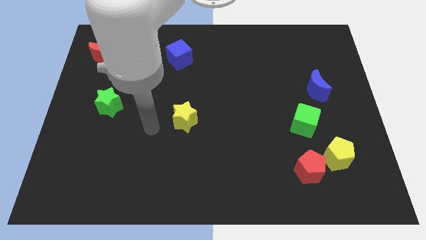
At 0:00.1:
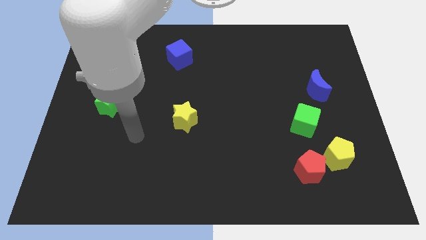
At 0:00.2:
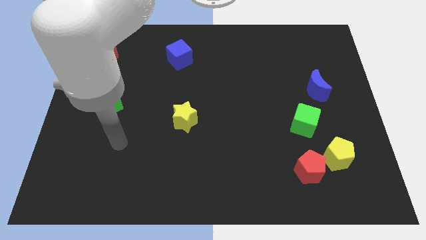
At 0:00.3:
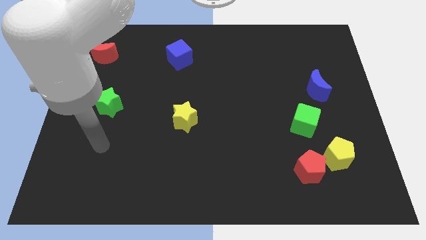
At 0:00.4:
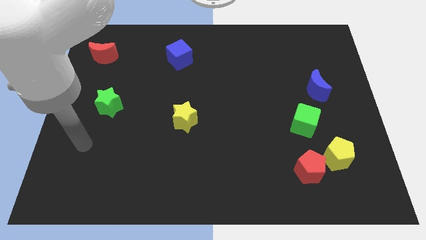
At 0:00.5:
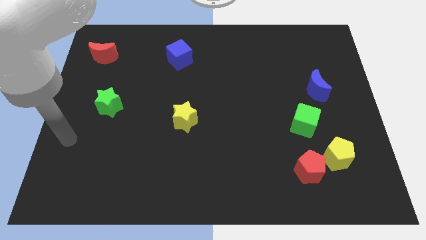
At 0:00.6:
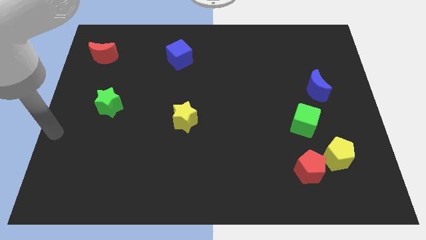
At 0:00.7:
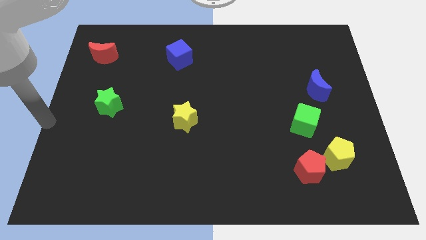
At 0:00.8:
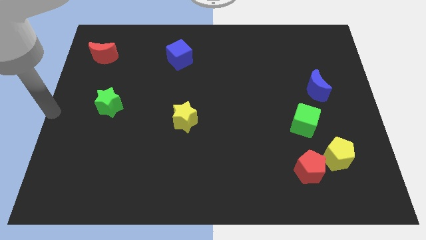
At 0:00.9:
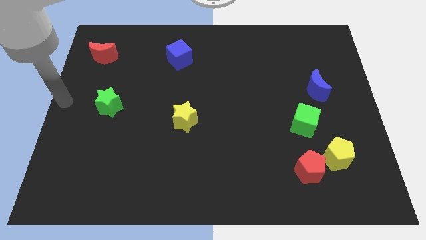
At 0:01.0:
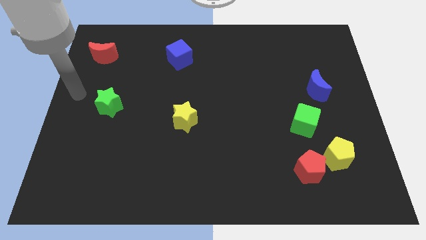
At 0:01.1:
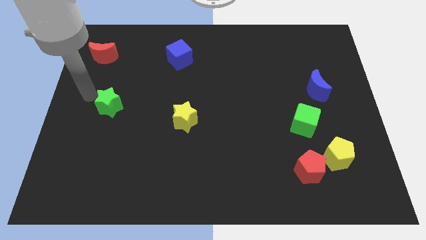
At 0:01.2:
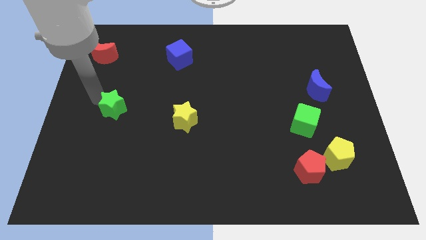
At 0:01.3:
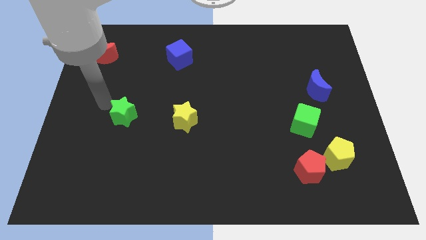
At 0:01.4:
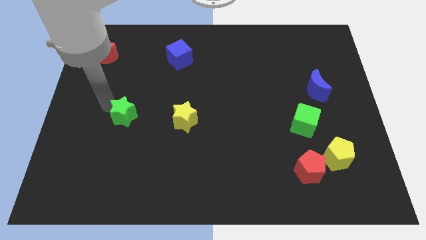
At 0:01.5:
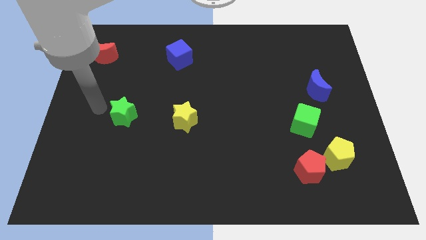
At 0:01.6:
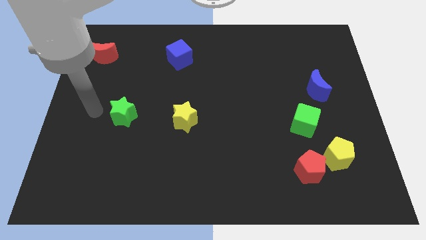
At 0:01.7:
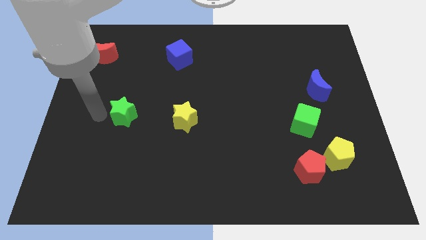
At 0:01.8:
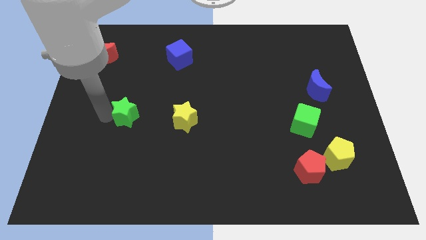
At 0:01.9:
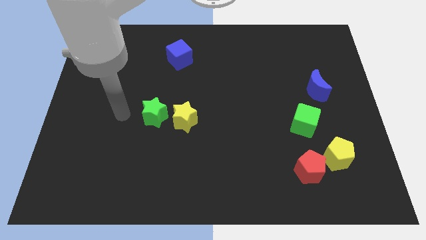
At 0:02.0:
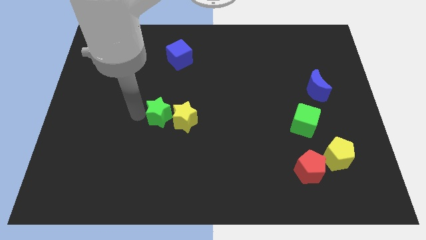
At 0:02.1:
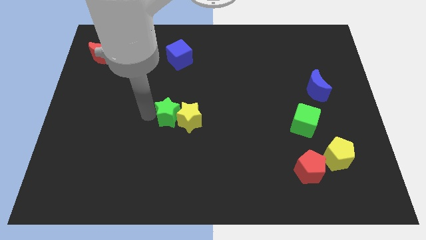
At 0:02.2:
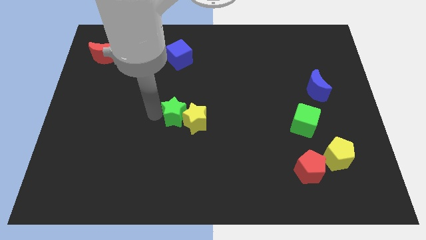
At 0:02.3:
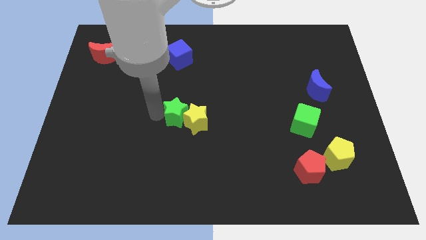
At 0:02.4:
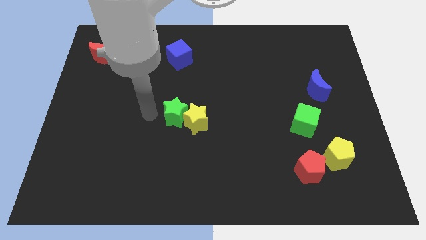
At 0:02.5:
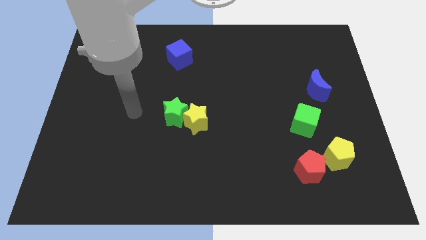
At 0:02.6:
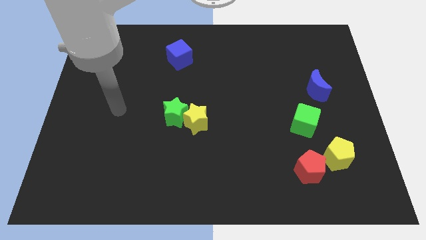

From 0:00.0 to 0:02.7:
move the green star into the yellow star

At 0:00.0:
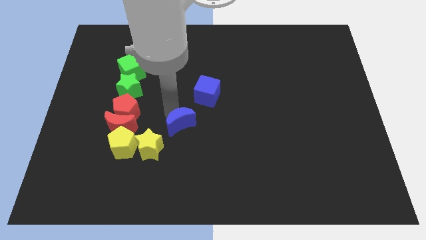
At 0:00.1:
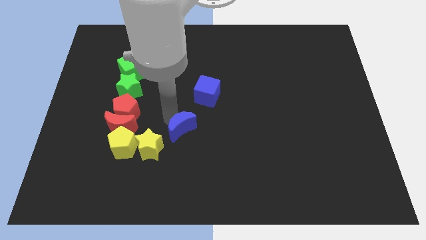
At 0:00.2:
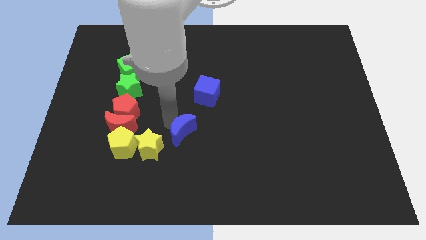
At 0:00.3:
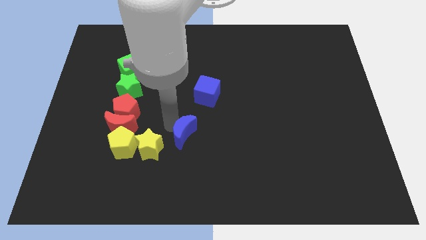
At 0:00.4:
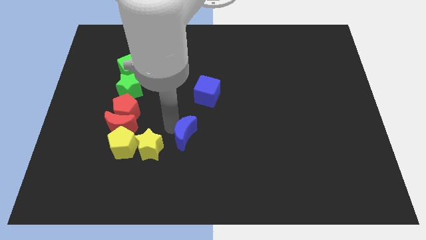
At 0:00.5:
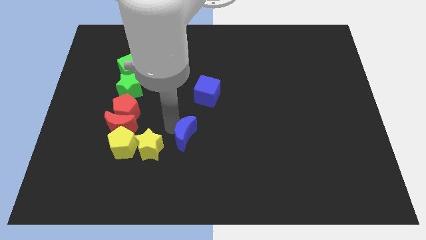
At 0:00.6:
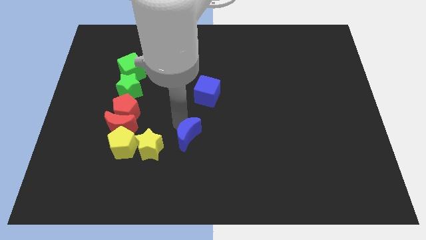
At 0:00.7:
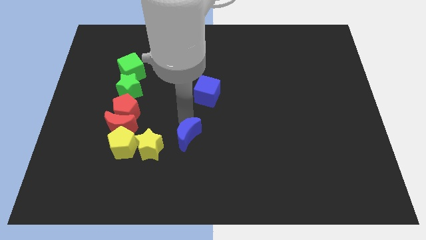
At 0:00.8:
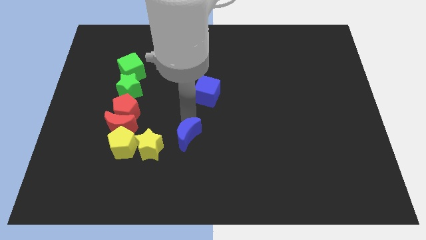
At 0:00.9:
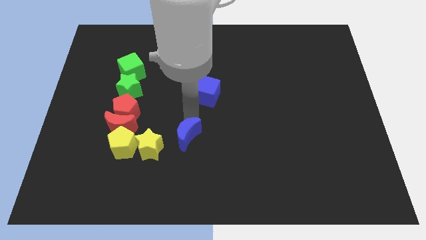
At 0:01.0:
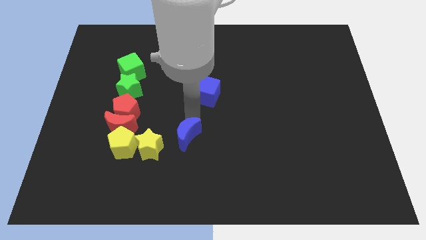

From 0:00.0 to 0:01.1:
drag the blue moon slightly down

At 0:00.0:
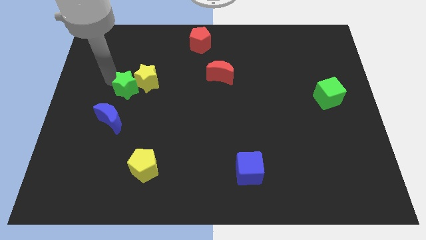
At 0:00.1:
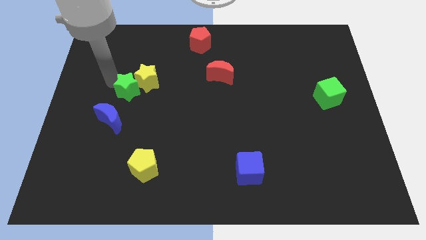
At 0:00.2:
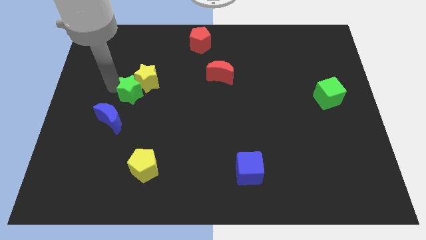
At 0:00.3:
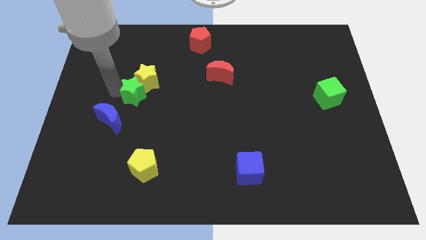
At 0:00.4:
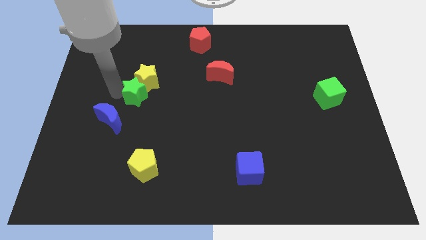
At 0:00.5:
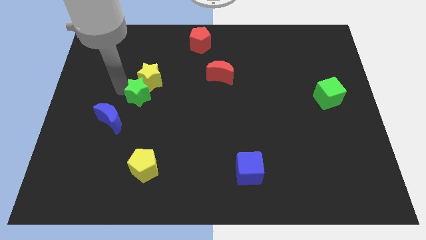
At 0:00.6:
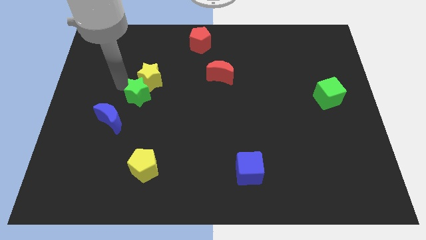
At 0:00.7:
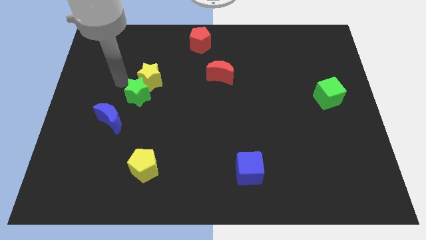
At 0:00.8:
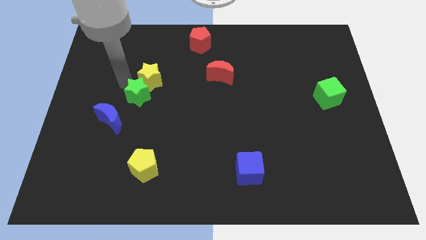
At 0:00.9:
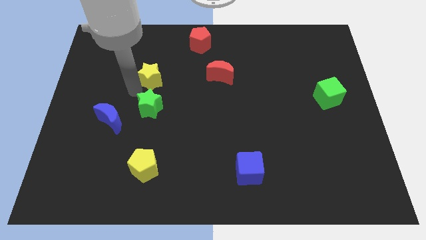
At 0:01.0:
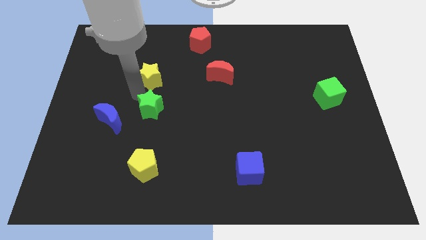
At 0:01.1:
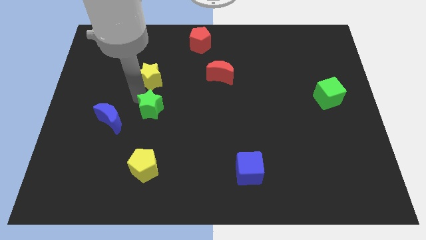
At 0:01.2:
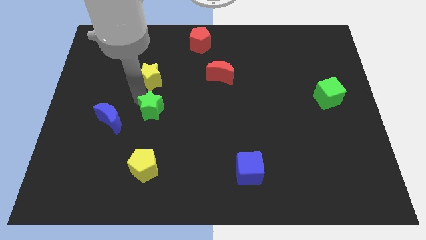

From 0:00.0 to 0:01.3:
move the green star to the bottom of the yellow star

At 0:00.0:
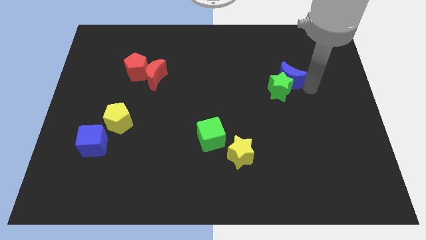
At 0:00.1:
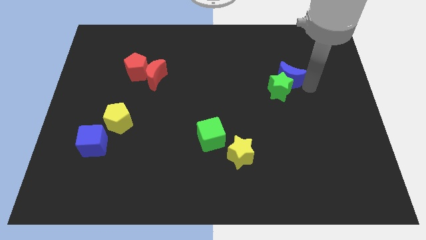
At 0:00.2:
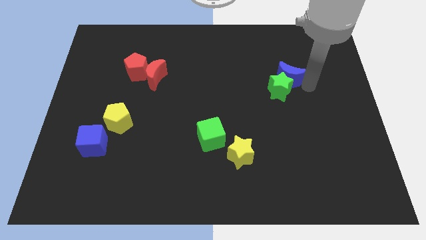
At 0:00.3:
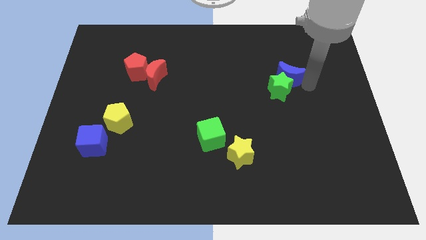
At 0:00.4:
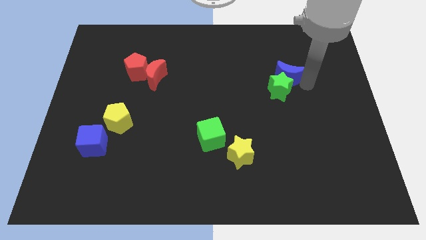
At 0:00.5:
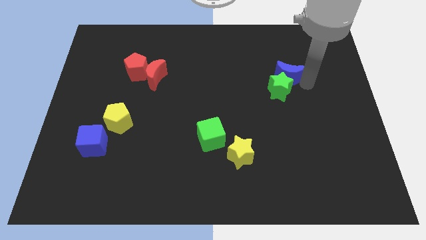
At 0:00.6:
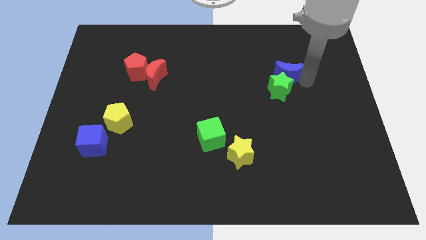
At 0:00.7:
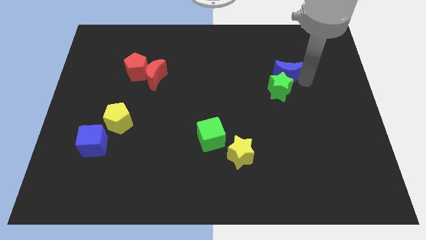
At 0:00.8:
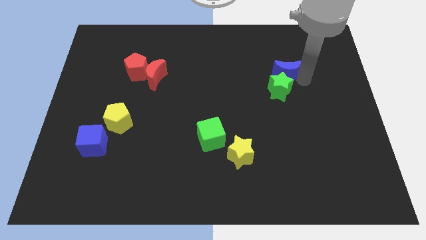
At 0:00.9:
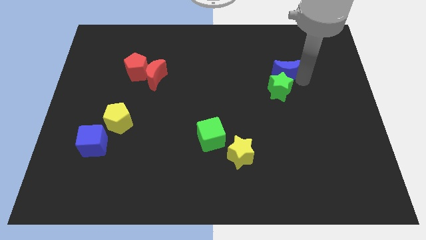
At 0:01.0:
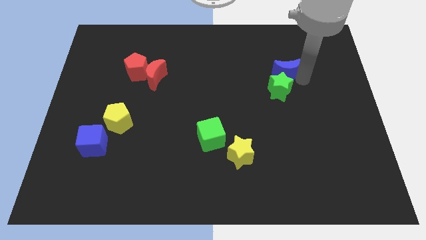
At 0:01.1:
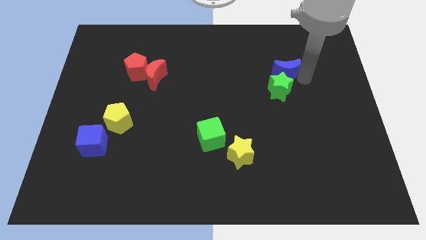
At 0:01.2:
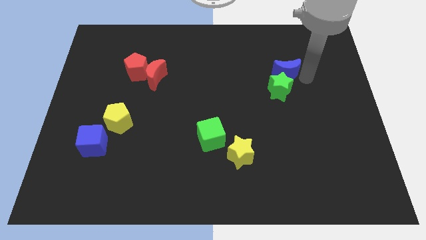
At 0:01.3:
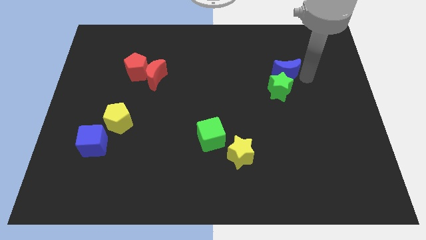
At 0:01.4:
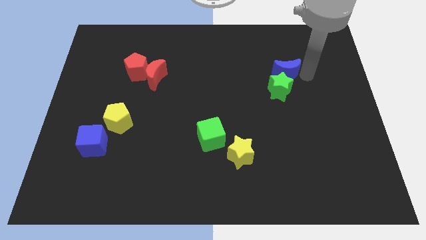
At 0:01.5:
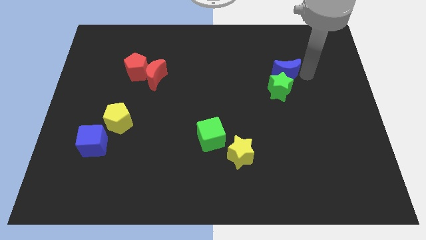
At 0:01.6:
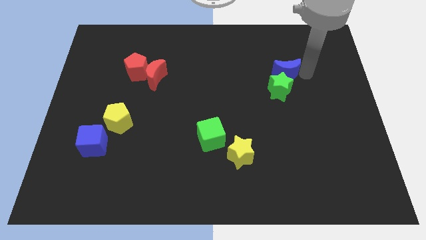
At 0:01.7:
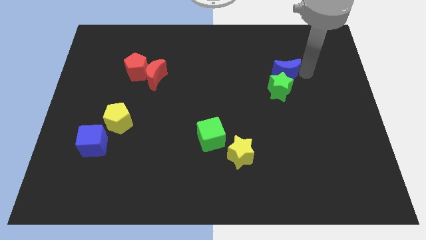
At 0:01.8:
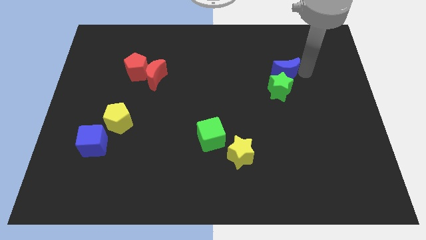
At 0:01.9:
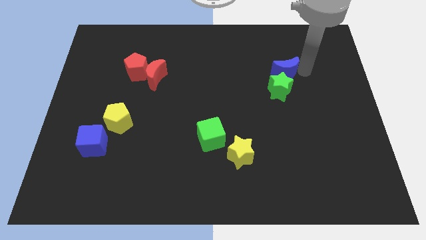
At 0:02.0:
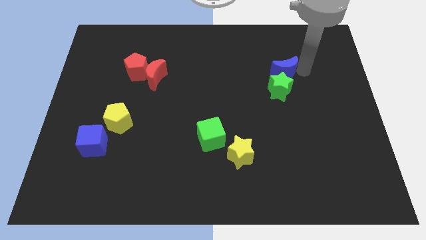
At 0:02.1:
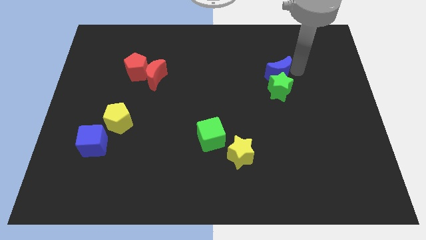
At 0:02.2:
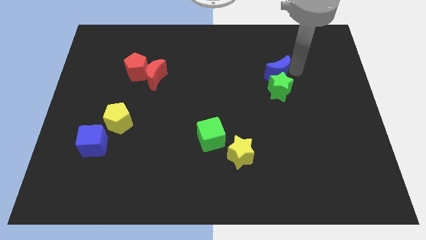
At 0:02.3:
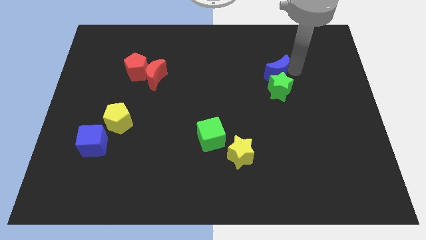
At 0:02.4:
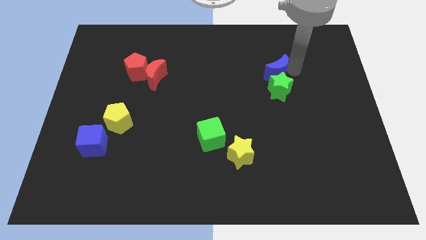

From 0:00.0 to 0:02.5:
move the blue crescent to the top of the green star

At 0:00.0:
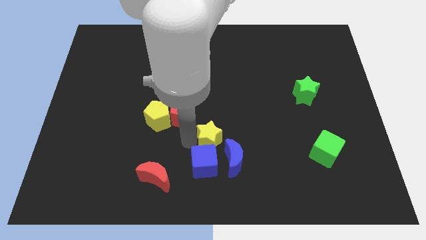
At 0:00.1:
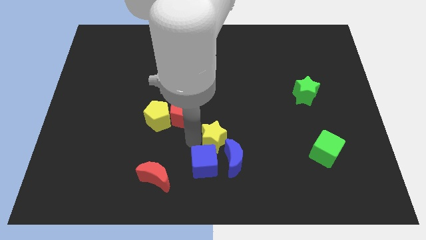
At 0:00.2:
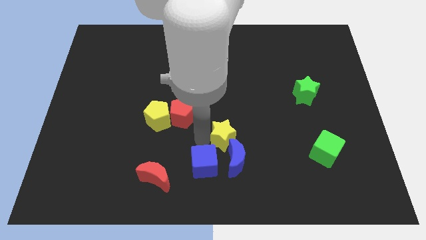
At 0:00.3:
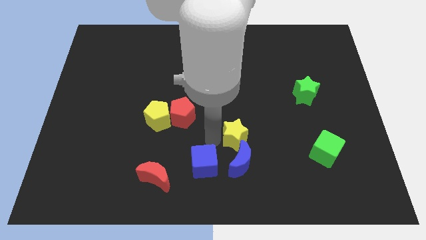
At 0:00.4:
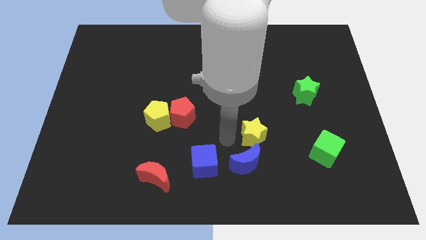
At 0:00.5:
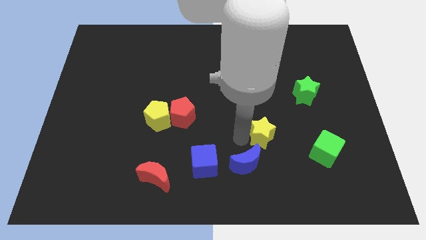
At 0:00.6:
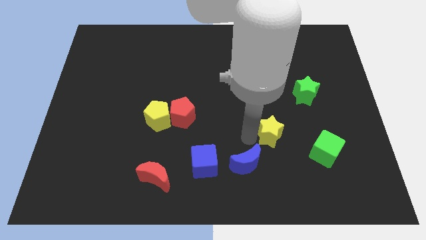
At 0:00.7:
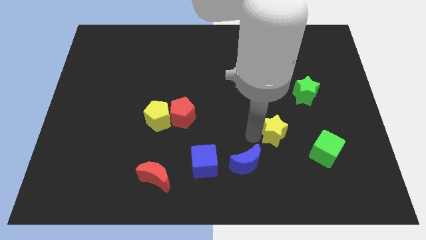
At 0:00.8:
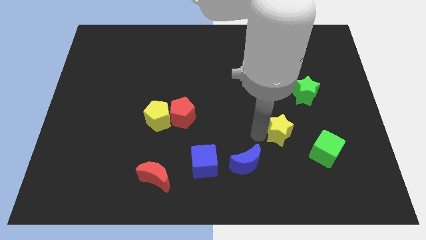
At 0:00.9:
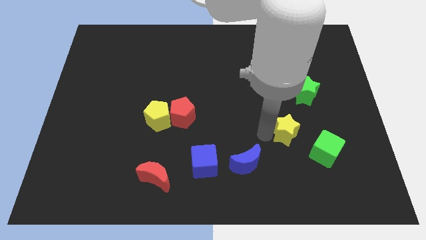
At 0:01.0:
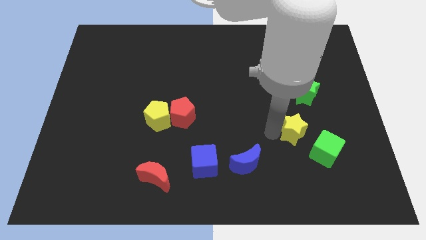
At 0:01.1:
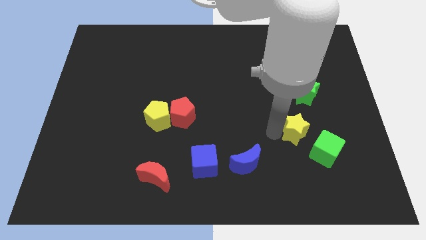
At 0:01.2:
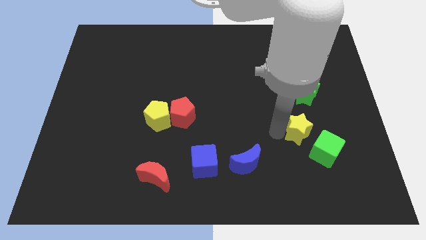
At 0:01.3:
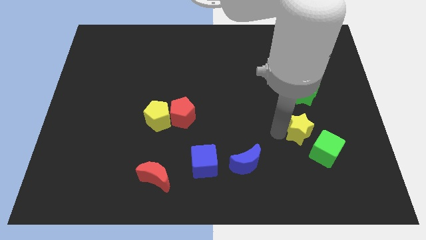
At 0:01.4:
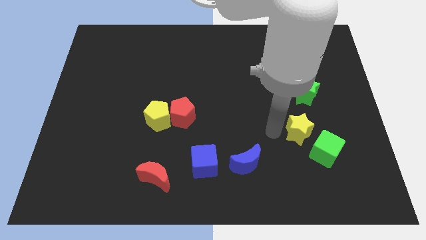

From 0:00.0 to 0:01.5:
push the yellow star to the bottom of the green star
